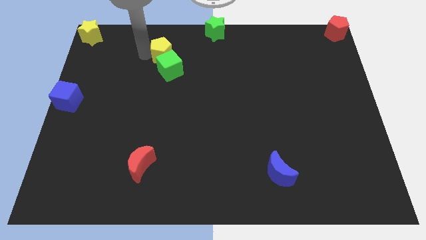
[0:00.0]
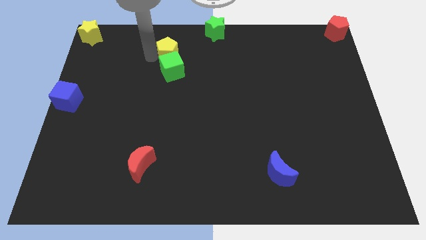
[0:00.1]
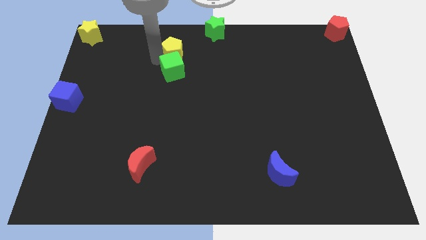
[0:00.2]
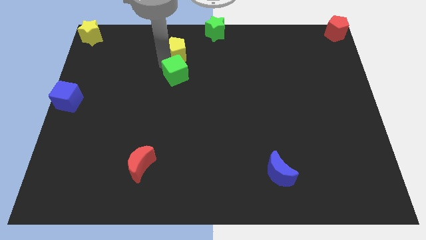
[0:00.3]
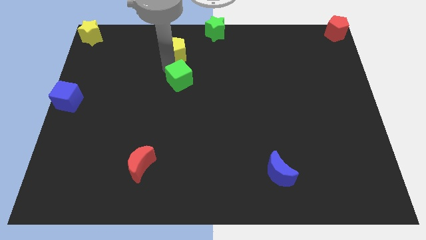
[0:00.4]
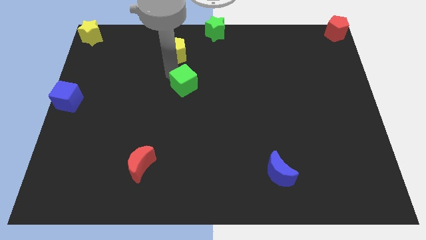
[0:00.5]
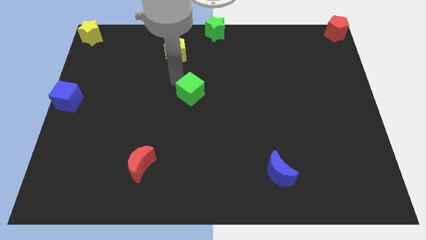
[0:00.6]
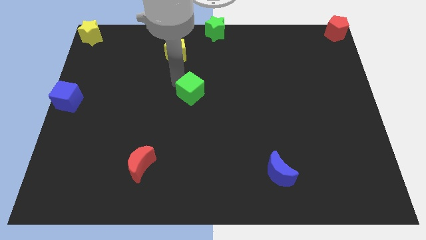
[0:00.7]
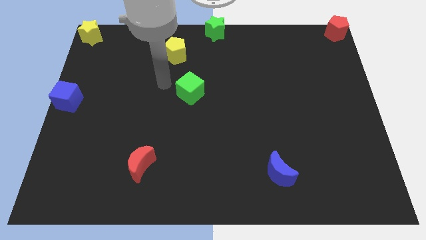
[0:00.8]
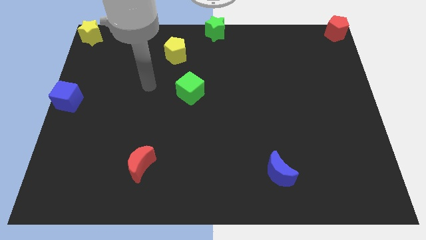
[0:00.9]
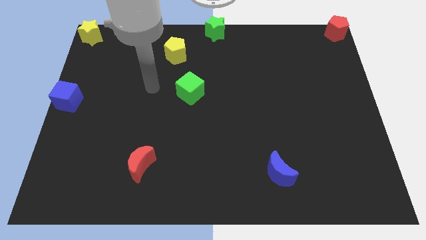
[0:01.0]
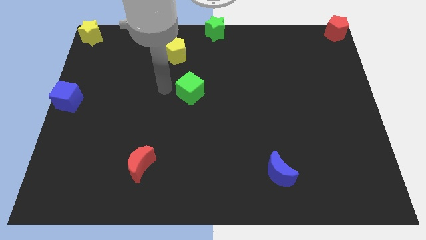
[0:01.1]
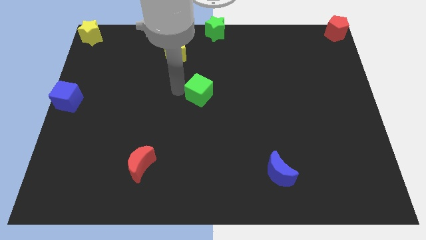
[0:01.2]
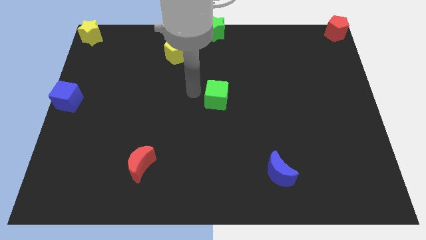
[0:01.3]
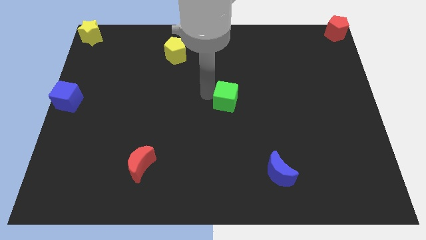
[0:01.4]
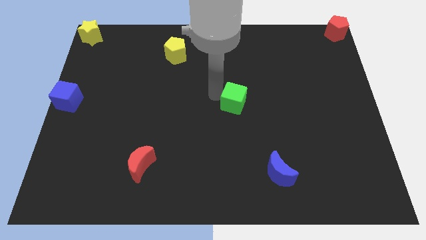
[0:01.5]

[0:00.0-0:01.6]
separate the yellow pentagon and green cube

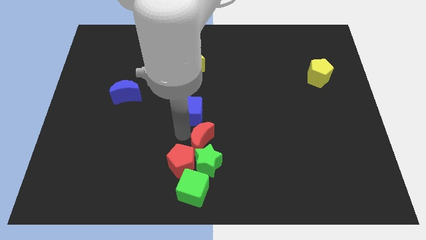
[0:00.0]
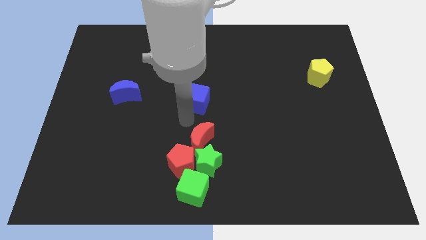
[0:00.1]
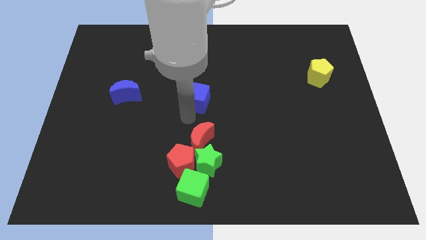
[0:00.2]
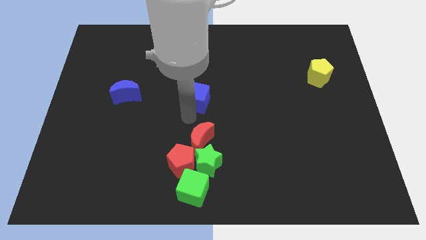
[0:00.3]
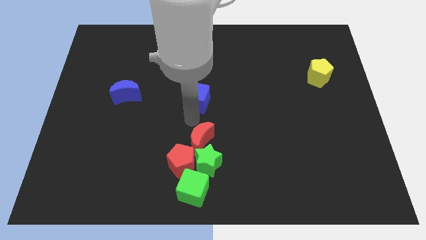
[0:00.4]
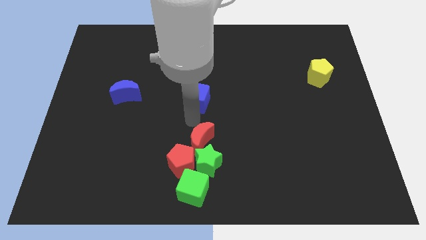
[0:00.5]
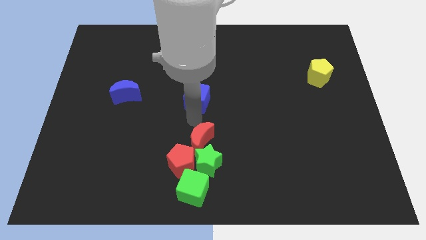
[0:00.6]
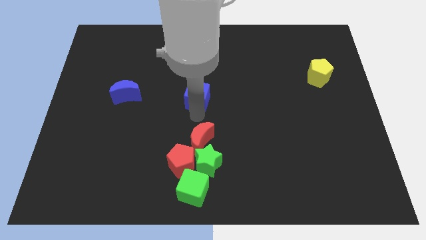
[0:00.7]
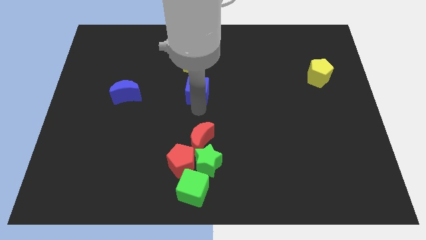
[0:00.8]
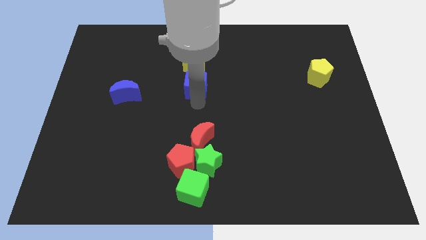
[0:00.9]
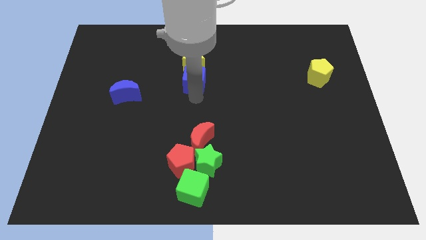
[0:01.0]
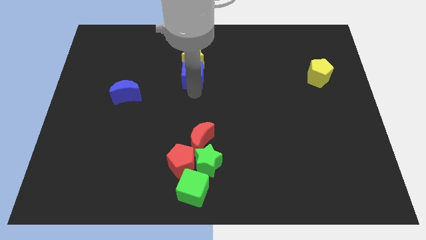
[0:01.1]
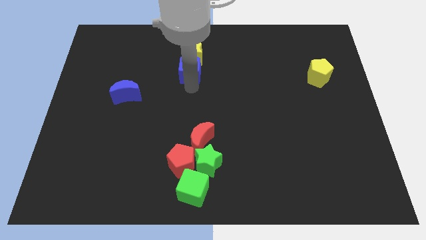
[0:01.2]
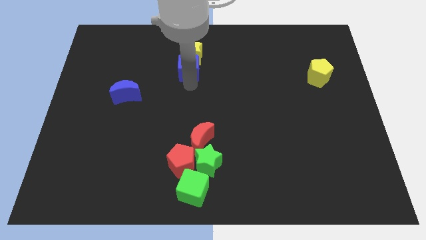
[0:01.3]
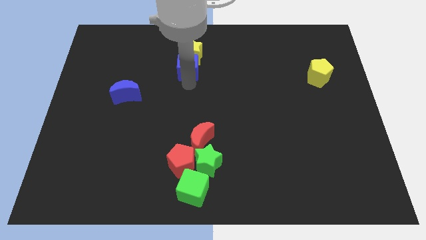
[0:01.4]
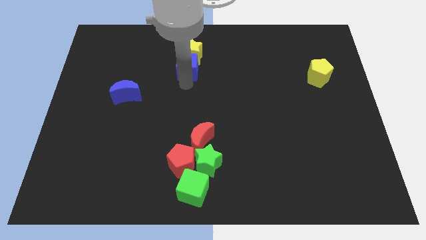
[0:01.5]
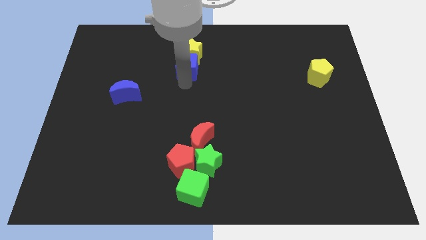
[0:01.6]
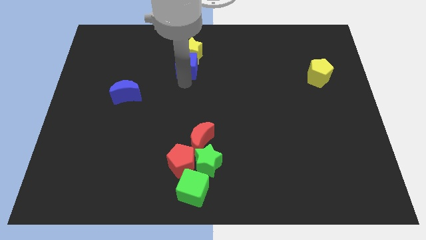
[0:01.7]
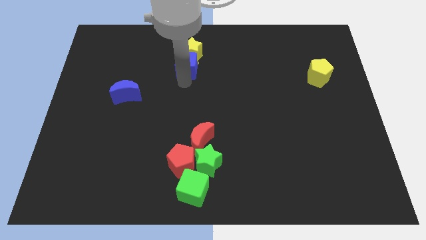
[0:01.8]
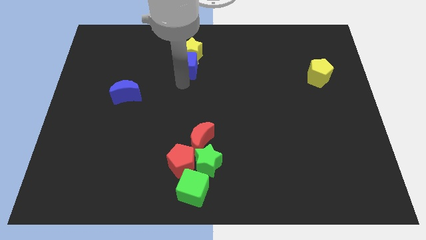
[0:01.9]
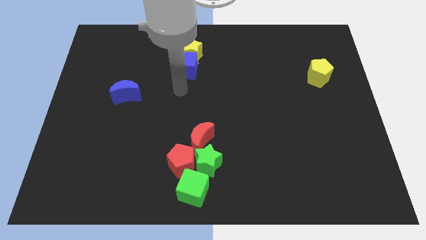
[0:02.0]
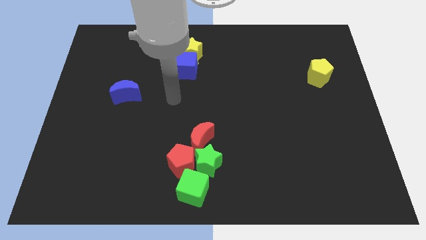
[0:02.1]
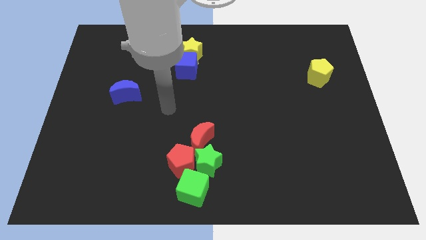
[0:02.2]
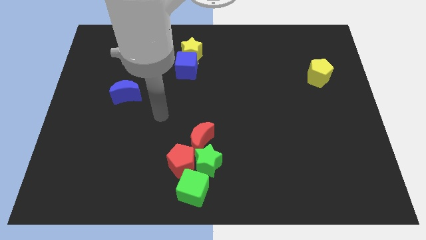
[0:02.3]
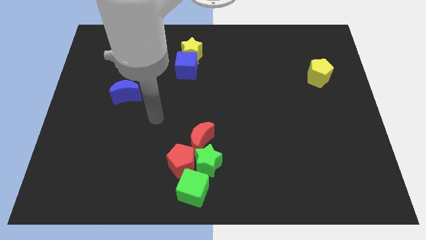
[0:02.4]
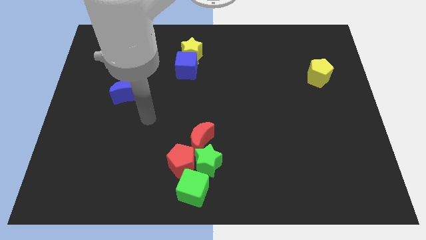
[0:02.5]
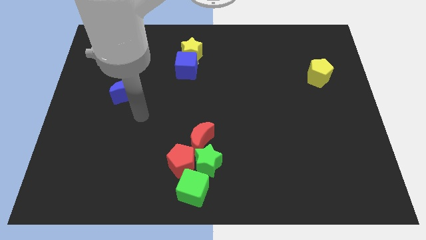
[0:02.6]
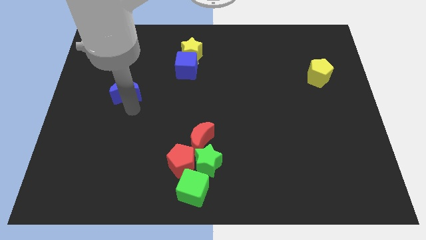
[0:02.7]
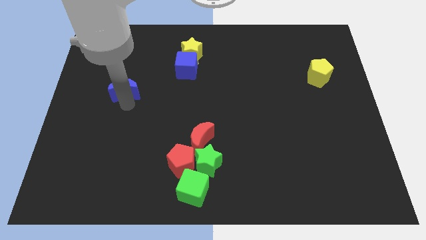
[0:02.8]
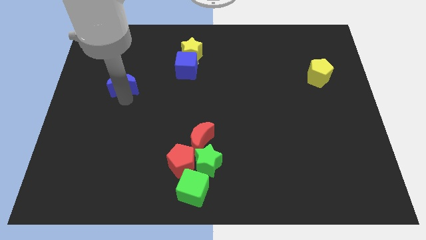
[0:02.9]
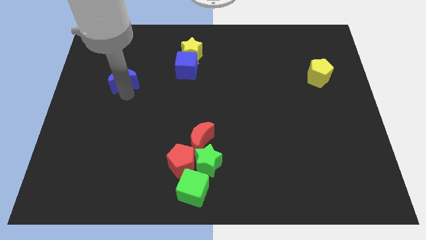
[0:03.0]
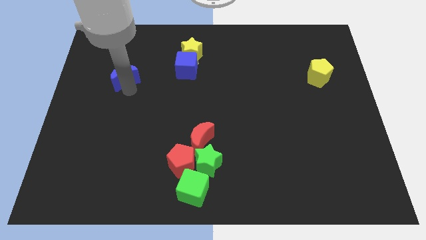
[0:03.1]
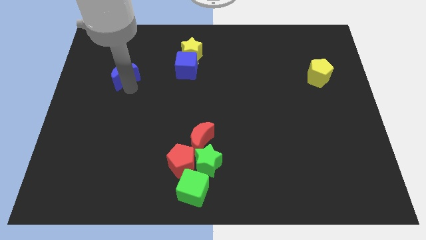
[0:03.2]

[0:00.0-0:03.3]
place the blue cube below the yellow star

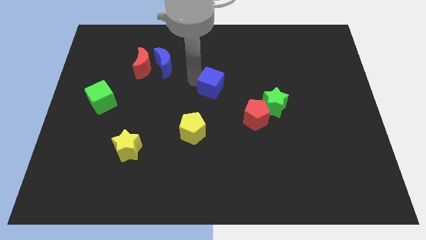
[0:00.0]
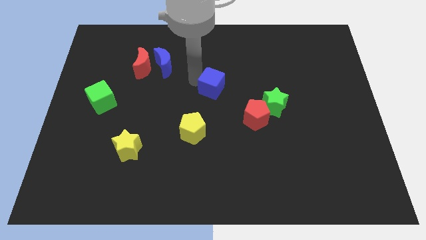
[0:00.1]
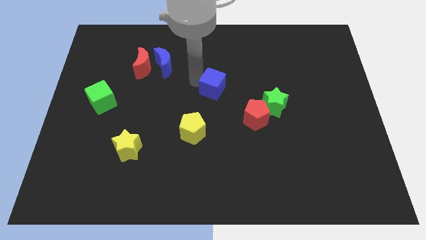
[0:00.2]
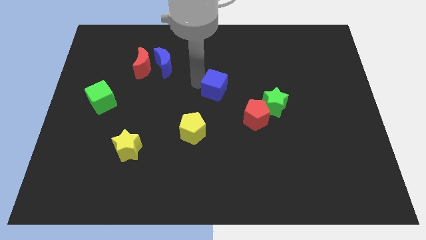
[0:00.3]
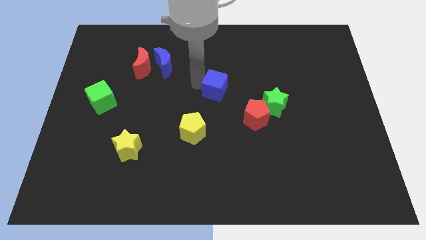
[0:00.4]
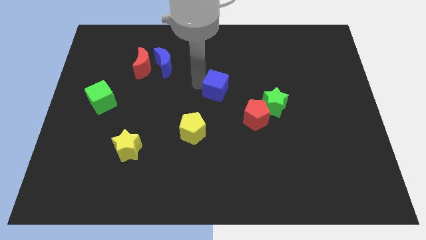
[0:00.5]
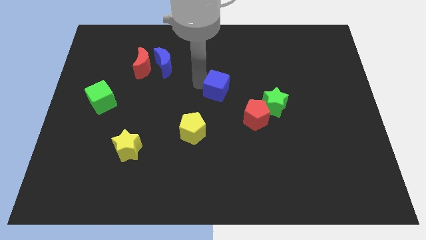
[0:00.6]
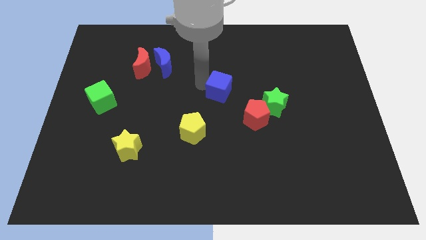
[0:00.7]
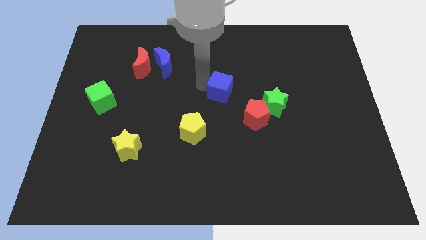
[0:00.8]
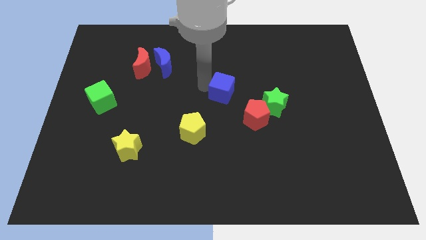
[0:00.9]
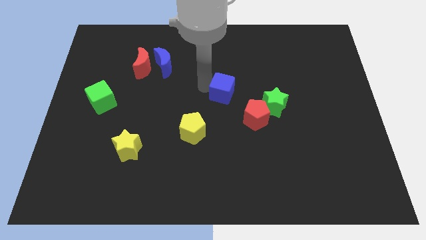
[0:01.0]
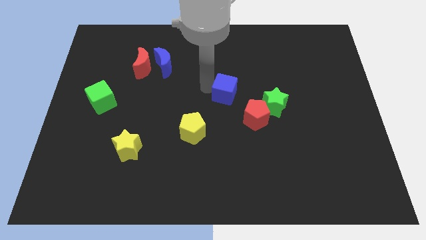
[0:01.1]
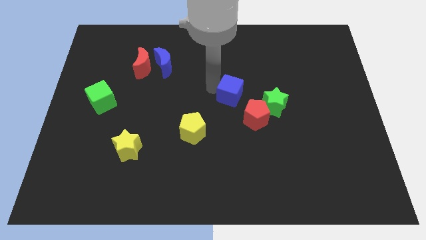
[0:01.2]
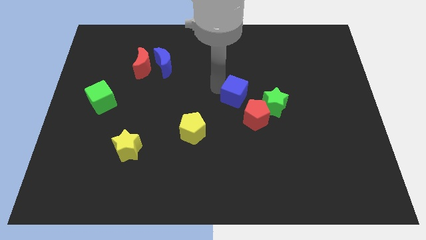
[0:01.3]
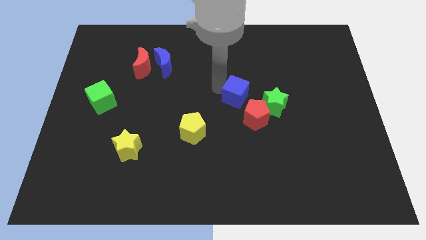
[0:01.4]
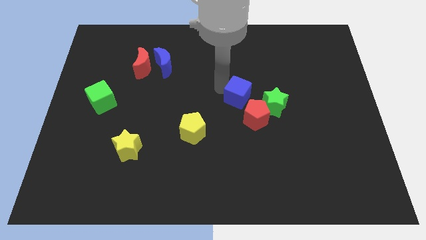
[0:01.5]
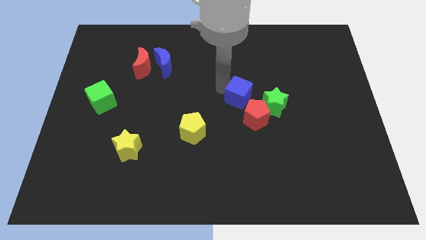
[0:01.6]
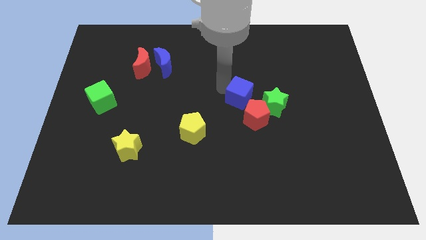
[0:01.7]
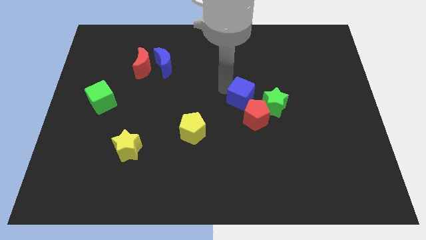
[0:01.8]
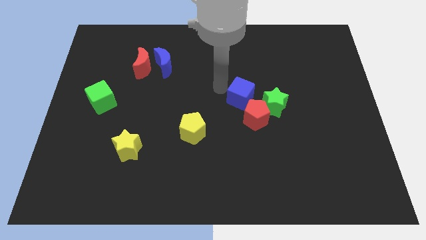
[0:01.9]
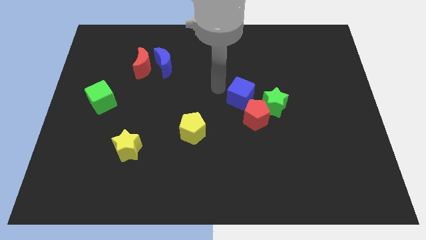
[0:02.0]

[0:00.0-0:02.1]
push blue cube towards red pentagon

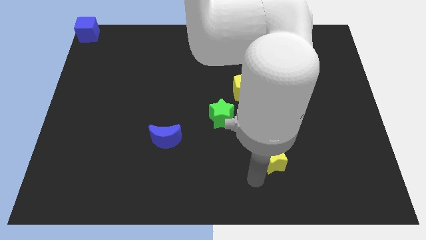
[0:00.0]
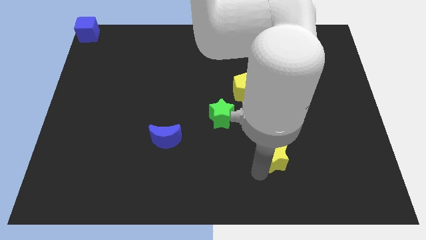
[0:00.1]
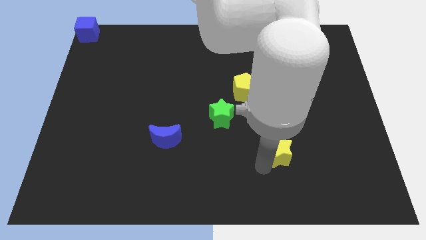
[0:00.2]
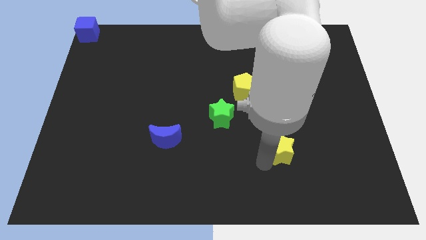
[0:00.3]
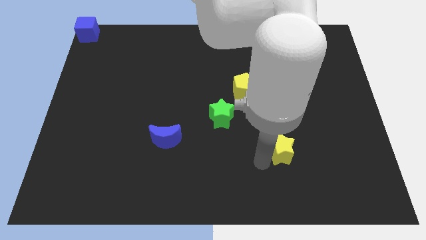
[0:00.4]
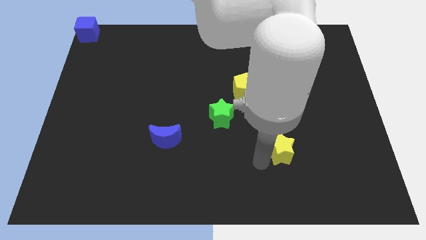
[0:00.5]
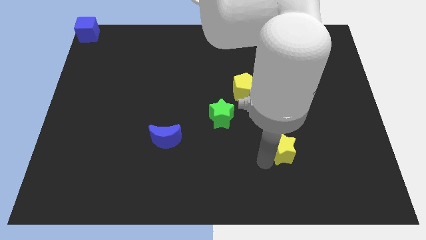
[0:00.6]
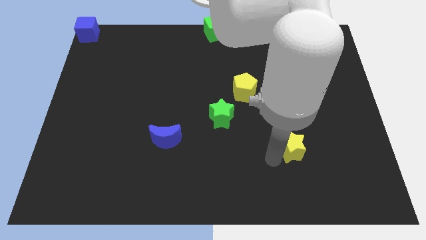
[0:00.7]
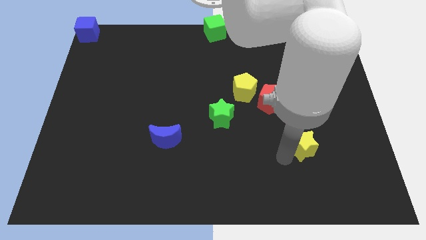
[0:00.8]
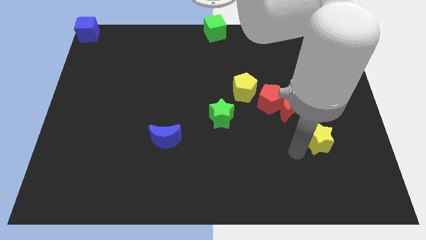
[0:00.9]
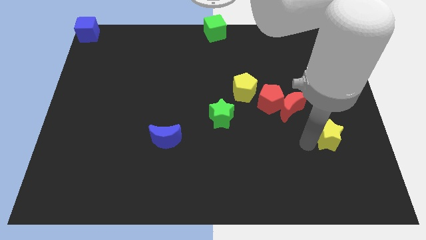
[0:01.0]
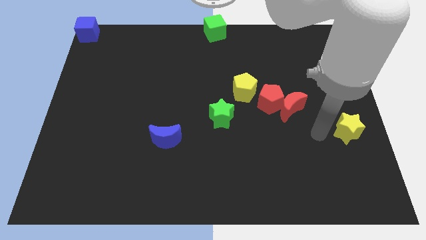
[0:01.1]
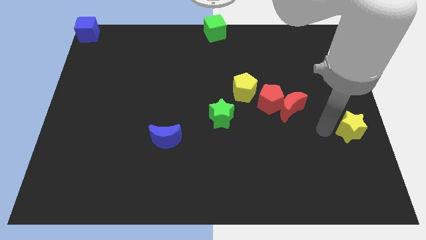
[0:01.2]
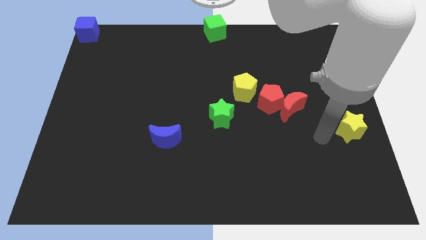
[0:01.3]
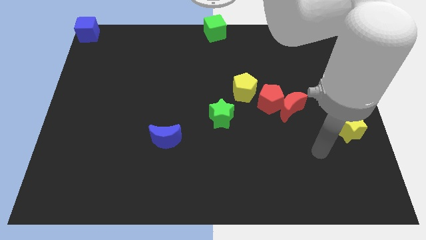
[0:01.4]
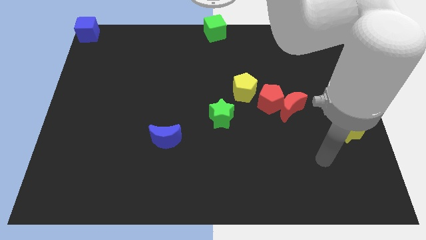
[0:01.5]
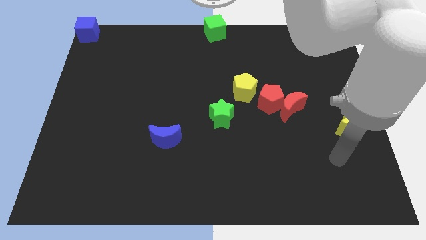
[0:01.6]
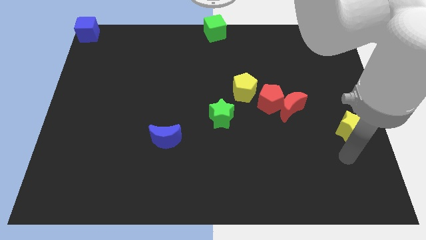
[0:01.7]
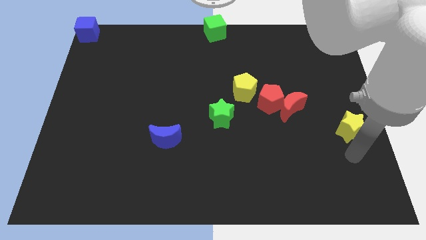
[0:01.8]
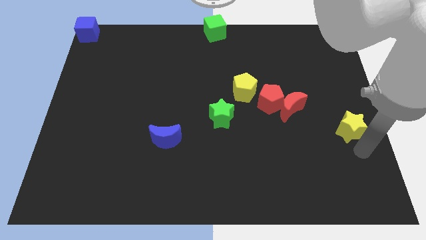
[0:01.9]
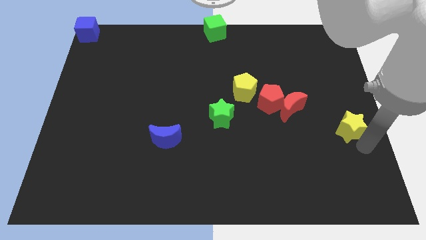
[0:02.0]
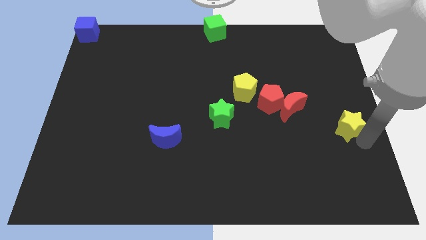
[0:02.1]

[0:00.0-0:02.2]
push the yellow star to the right
